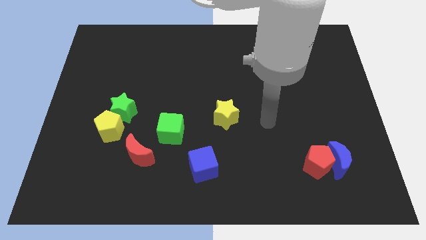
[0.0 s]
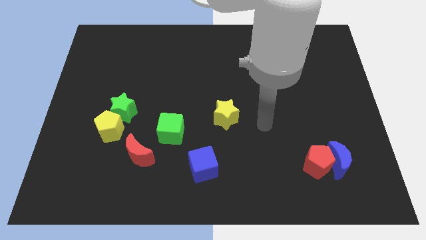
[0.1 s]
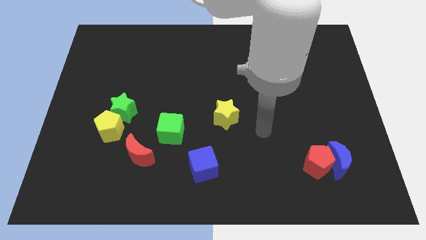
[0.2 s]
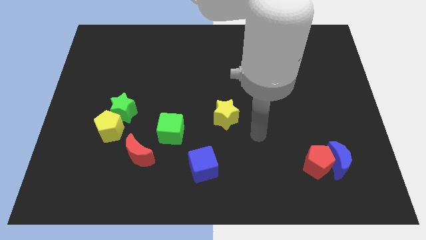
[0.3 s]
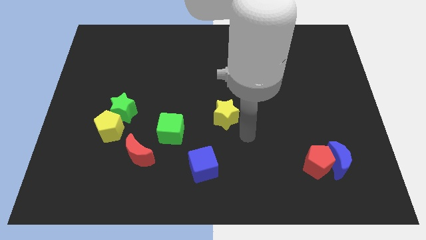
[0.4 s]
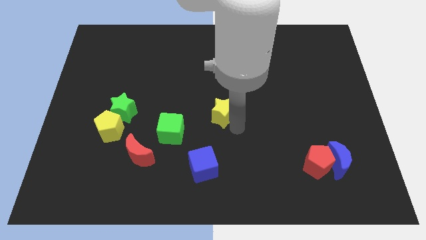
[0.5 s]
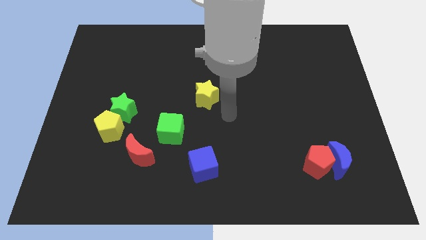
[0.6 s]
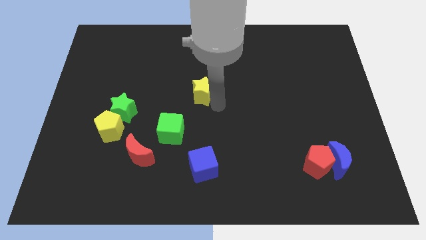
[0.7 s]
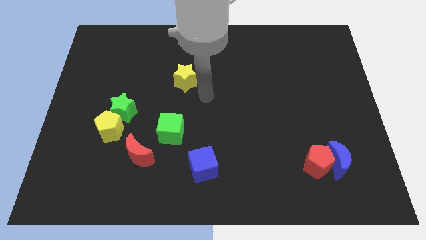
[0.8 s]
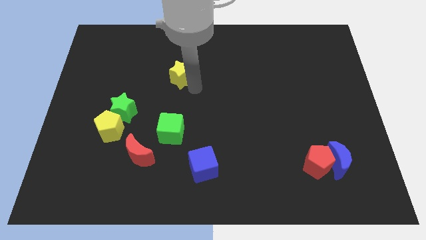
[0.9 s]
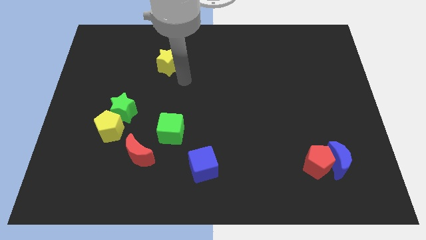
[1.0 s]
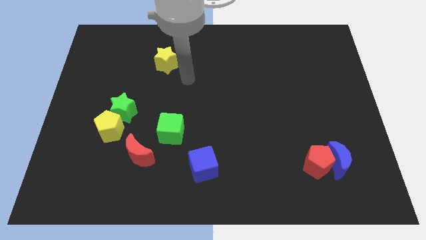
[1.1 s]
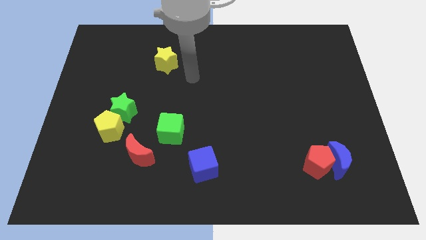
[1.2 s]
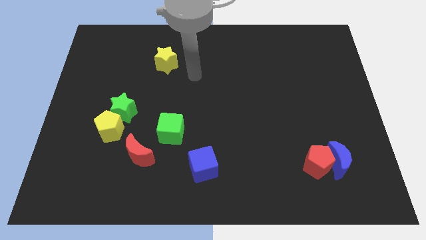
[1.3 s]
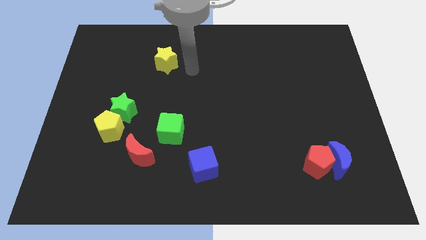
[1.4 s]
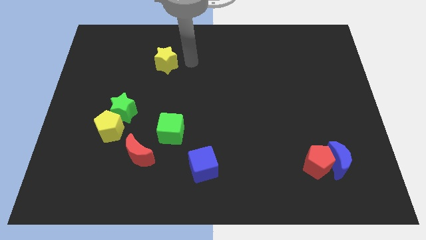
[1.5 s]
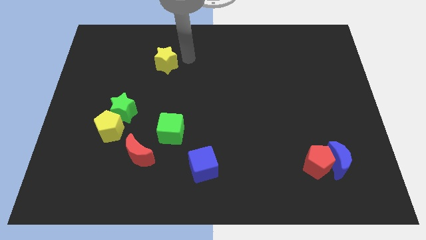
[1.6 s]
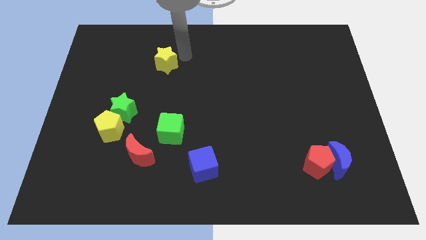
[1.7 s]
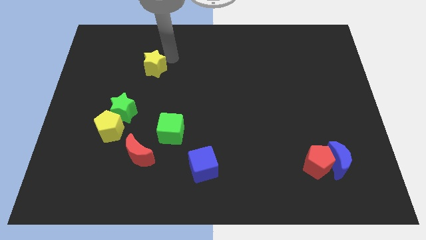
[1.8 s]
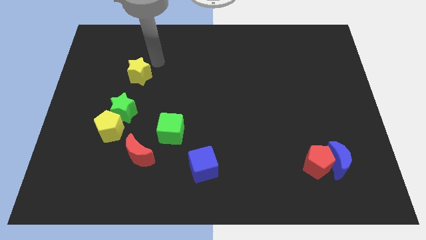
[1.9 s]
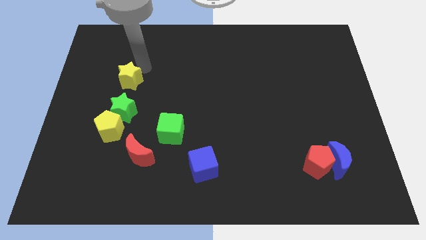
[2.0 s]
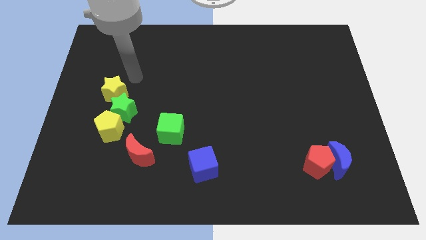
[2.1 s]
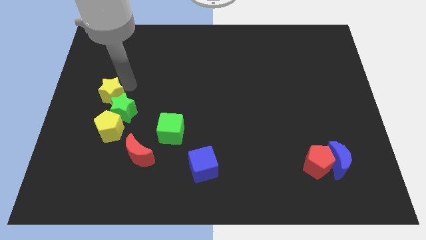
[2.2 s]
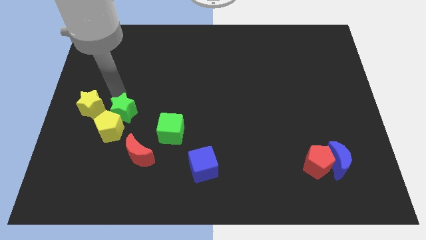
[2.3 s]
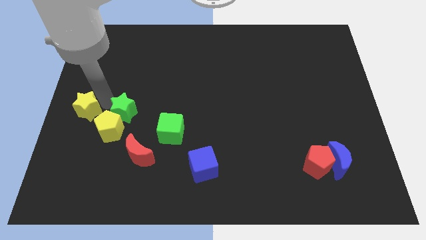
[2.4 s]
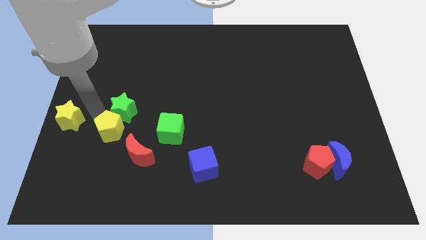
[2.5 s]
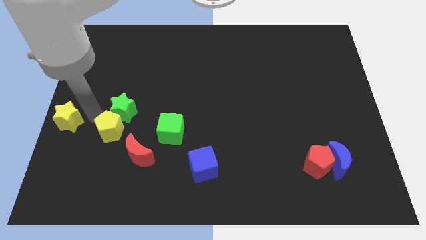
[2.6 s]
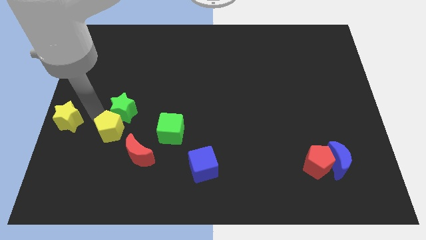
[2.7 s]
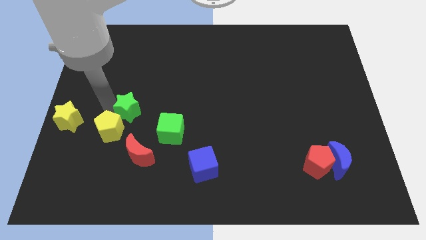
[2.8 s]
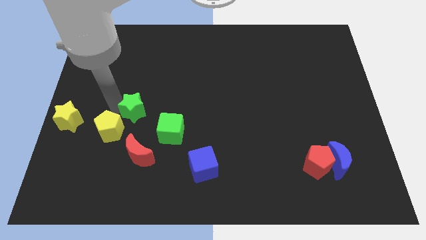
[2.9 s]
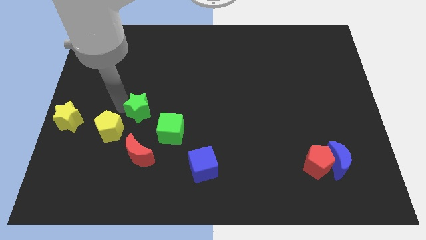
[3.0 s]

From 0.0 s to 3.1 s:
move the yellow star to the left of yellow pentagon

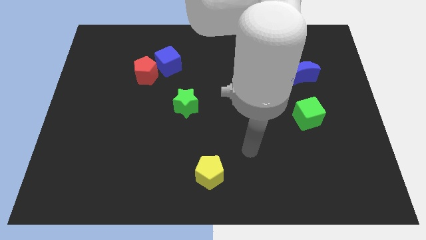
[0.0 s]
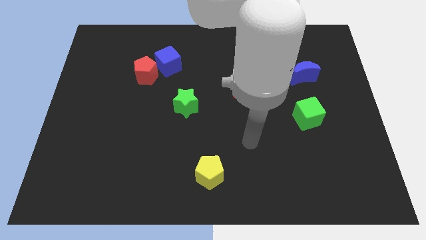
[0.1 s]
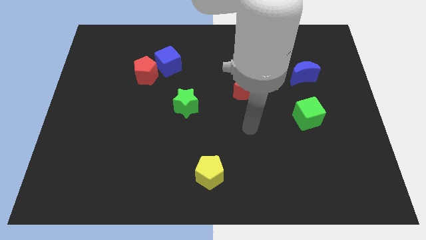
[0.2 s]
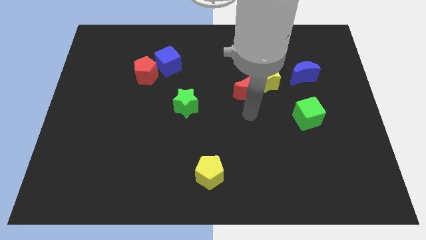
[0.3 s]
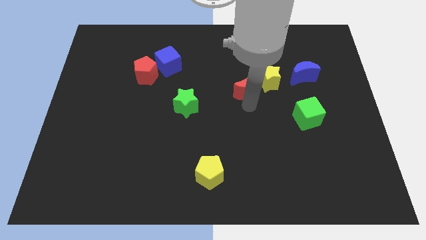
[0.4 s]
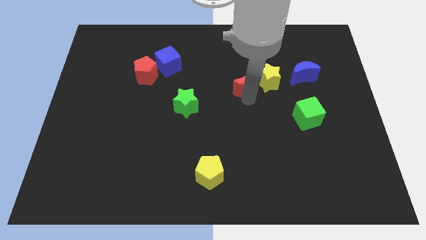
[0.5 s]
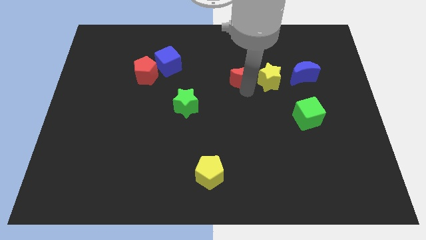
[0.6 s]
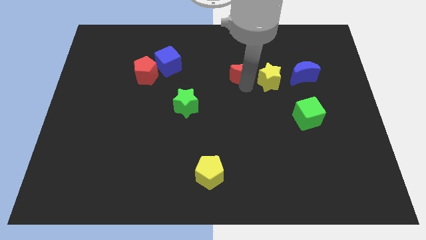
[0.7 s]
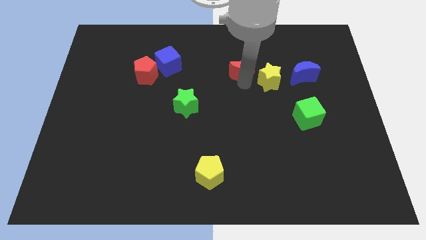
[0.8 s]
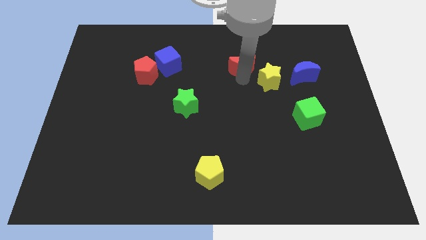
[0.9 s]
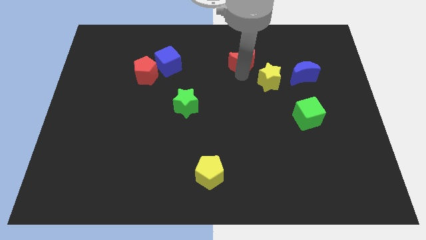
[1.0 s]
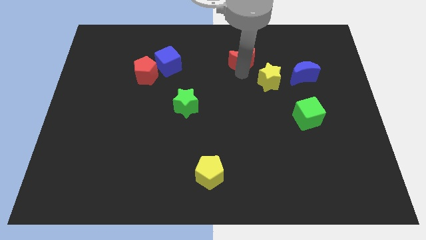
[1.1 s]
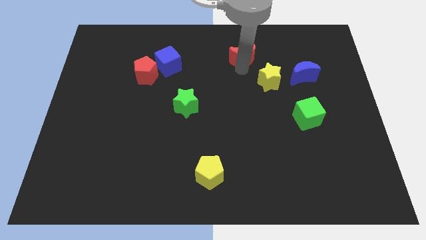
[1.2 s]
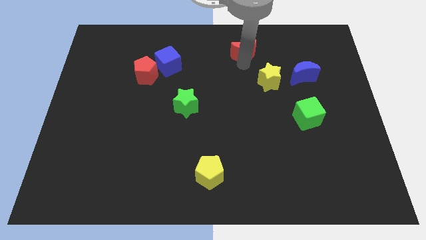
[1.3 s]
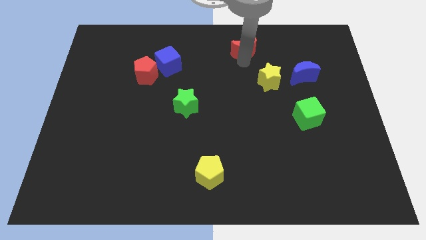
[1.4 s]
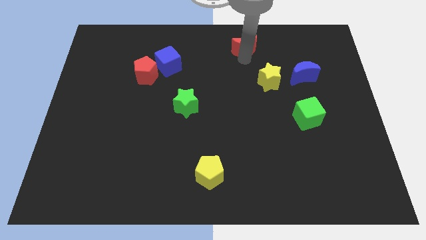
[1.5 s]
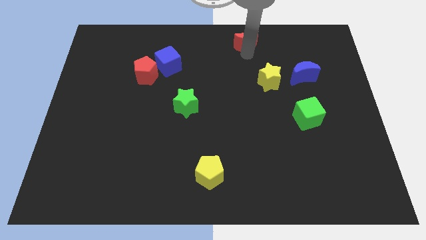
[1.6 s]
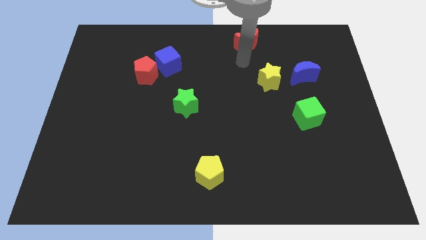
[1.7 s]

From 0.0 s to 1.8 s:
move the red crescent towards the top center

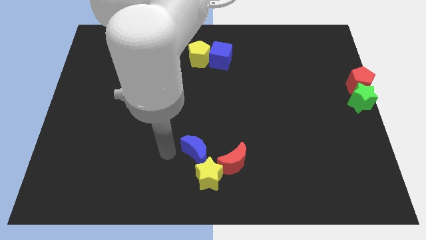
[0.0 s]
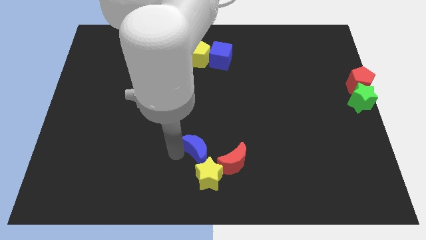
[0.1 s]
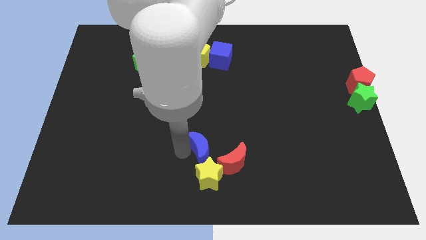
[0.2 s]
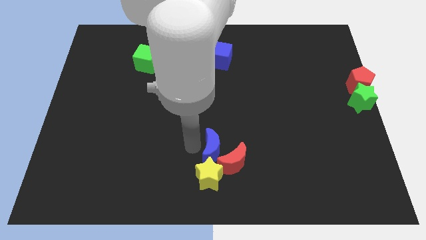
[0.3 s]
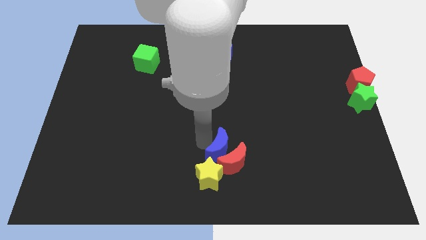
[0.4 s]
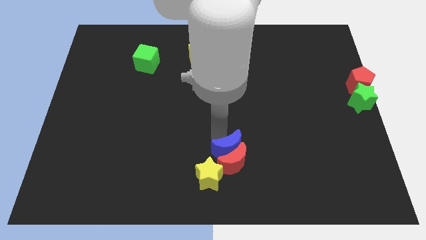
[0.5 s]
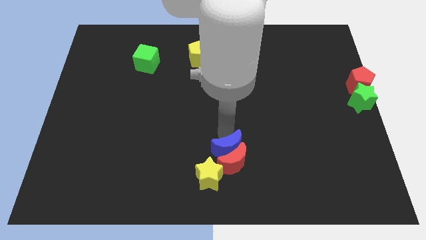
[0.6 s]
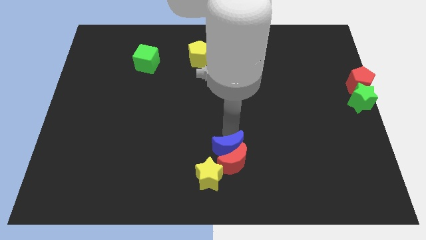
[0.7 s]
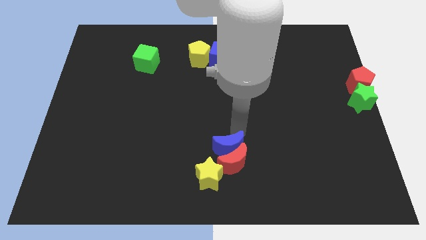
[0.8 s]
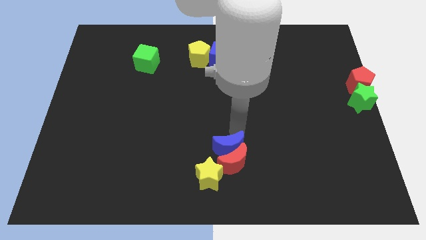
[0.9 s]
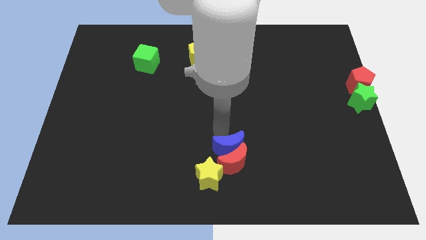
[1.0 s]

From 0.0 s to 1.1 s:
move blue moon close to red moon

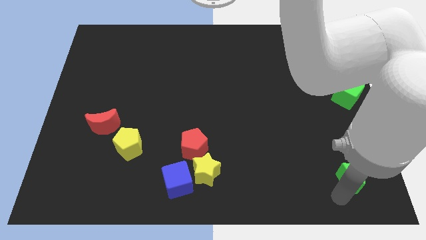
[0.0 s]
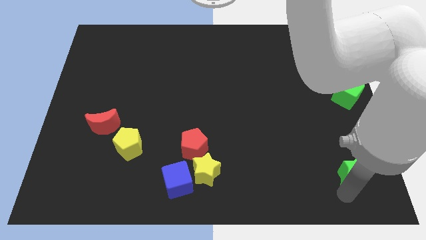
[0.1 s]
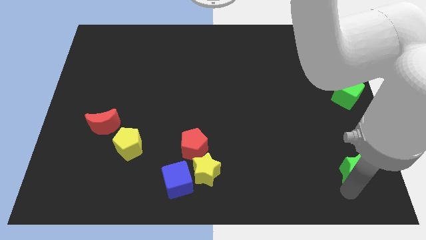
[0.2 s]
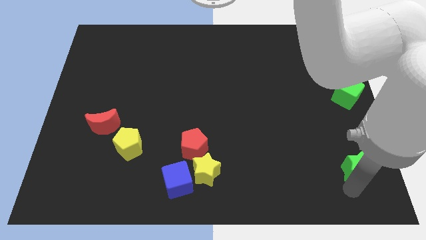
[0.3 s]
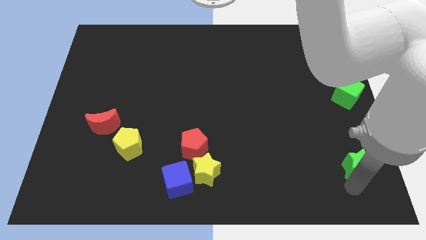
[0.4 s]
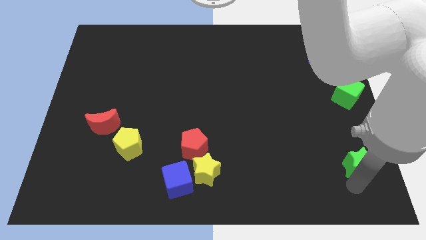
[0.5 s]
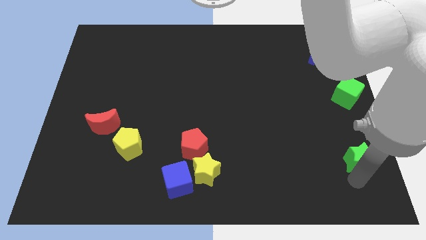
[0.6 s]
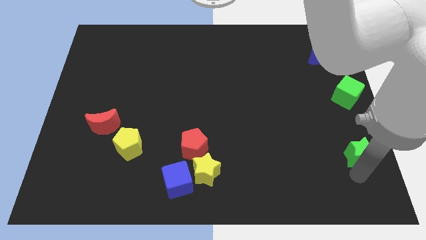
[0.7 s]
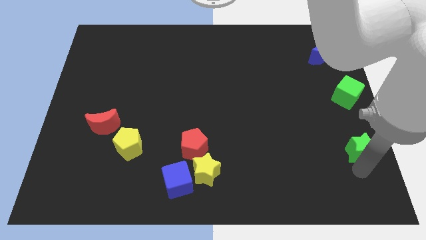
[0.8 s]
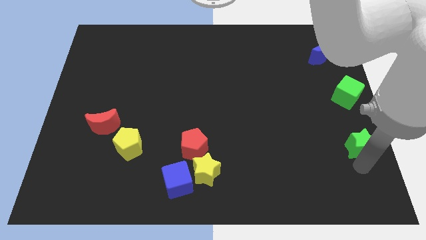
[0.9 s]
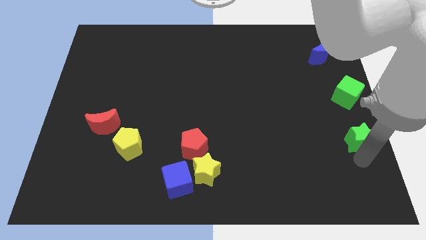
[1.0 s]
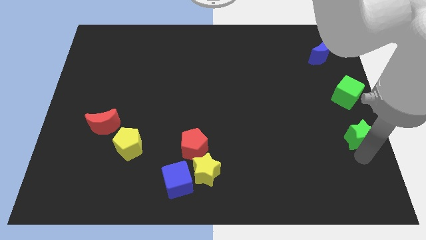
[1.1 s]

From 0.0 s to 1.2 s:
move the green star towards the green cube

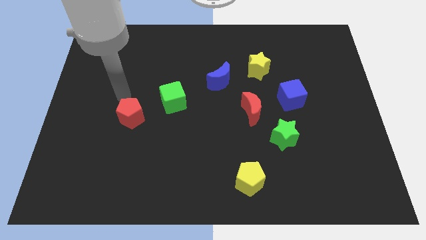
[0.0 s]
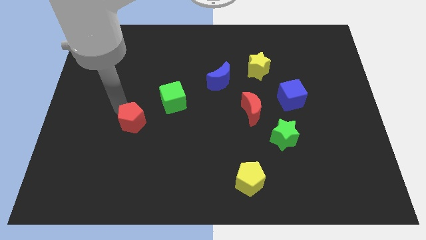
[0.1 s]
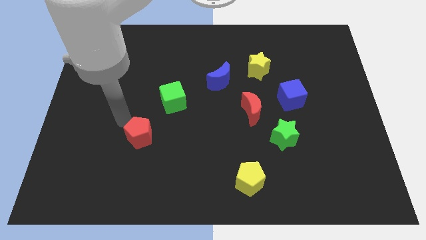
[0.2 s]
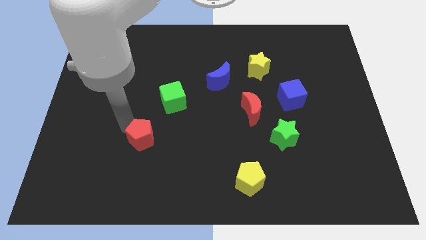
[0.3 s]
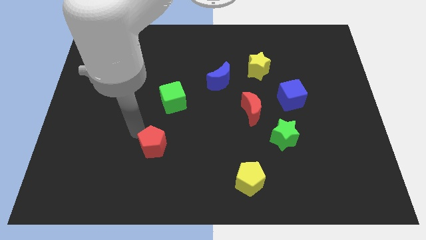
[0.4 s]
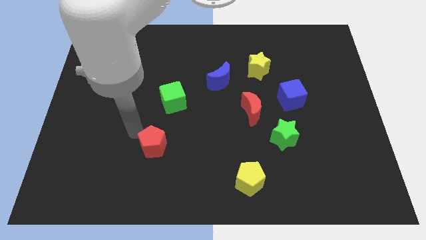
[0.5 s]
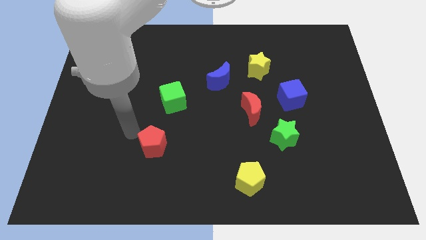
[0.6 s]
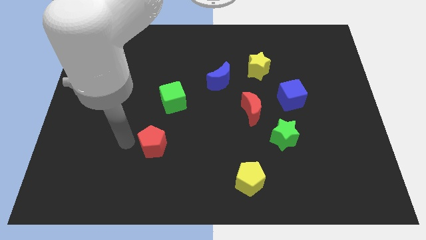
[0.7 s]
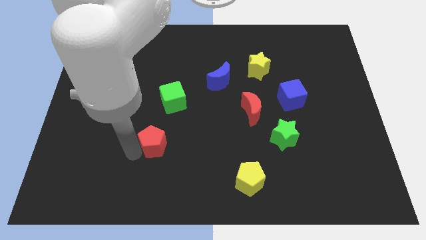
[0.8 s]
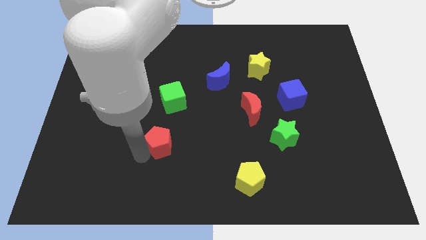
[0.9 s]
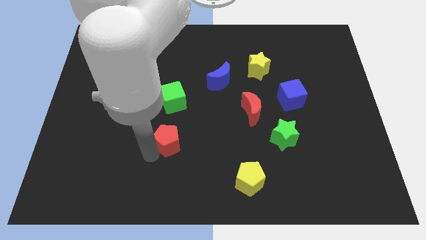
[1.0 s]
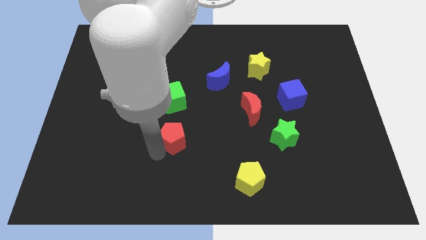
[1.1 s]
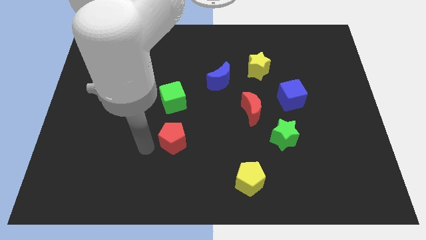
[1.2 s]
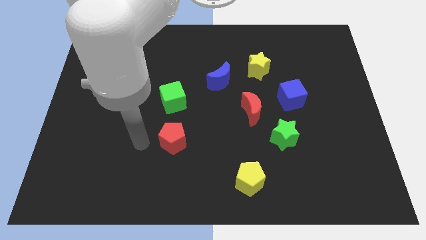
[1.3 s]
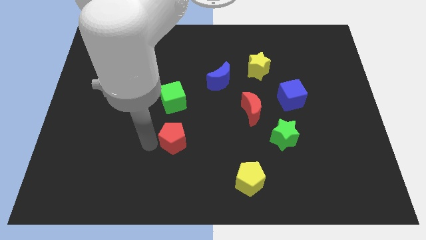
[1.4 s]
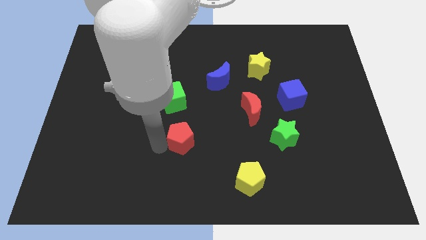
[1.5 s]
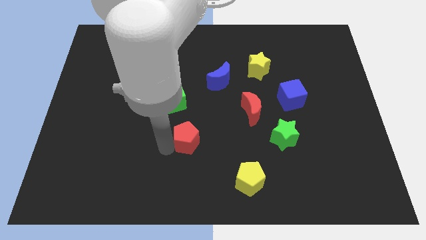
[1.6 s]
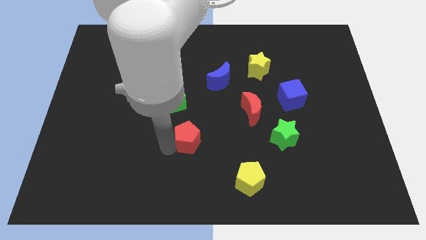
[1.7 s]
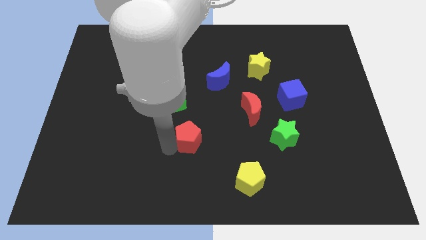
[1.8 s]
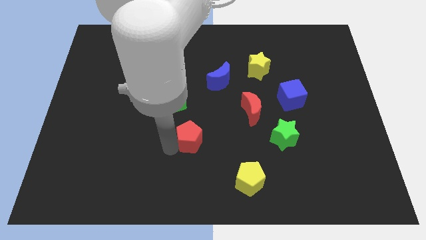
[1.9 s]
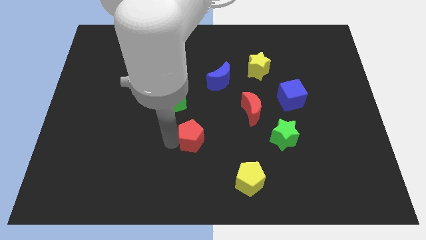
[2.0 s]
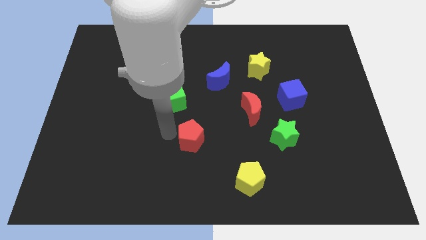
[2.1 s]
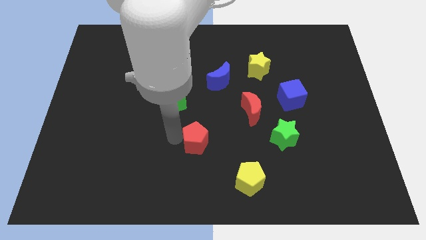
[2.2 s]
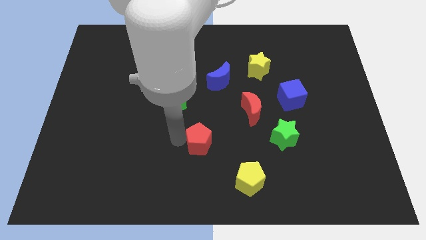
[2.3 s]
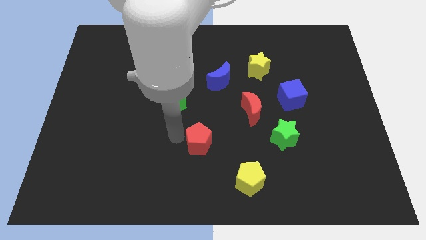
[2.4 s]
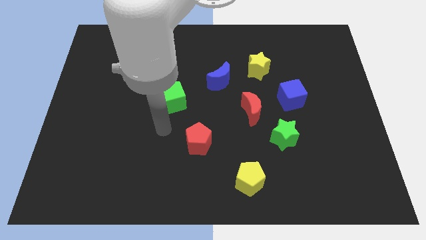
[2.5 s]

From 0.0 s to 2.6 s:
put the red pentagon between the green cube and yellow pentagon
